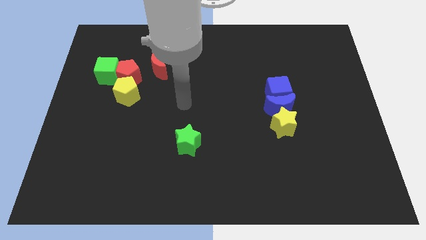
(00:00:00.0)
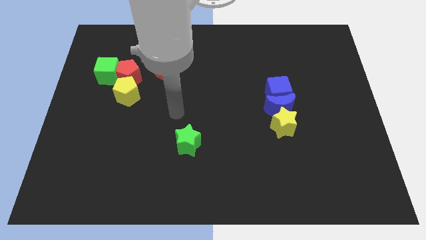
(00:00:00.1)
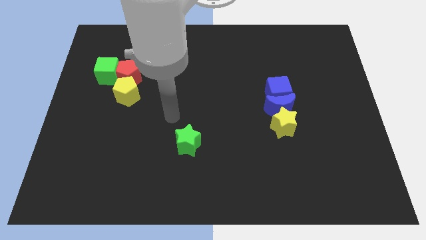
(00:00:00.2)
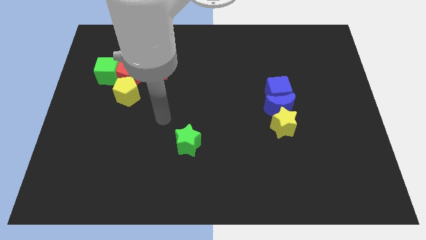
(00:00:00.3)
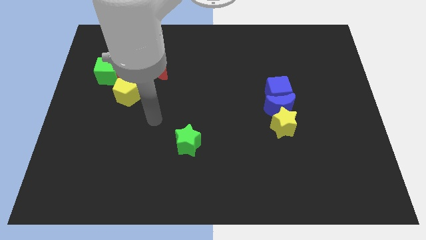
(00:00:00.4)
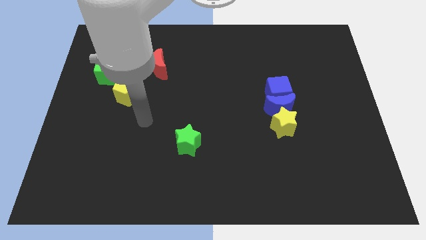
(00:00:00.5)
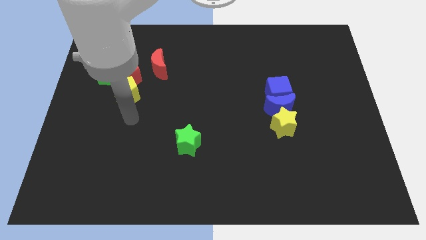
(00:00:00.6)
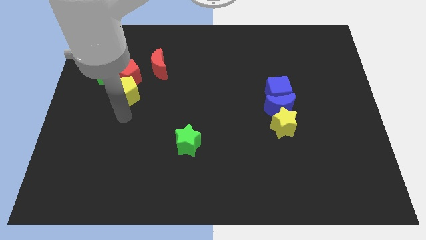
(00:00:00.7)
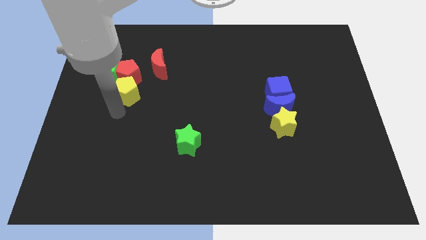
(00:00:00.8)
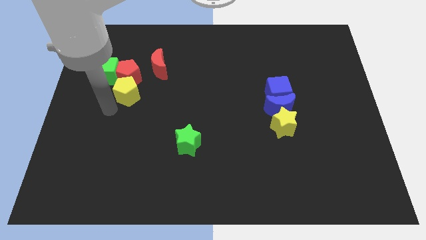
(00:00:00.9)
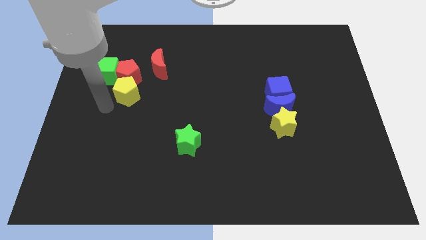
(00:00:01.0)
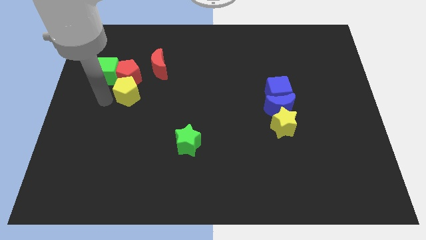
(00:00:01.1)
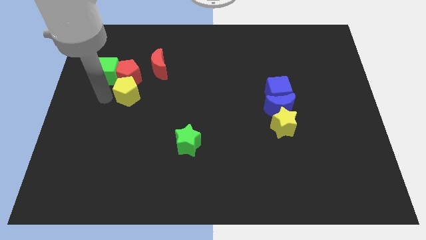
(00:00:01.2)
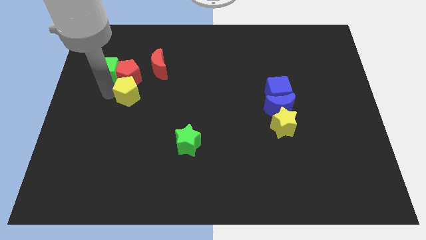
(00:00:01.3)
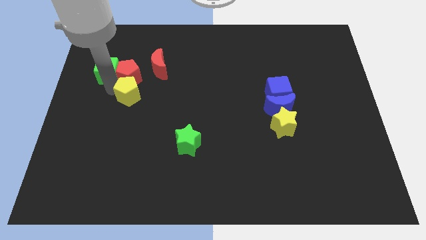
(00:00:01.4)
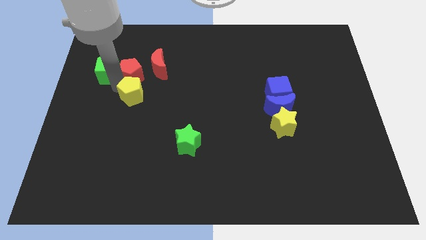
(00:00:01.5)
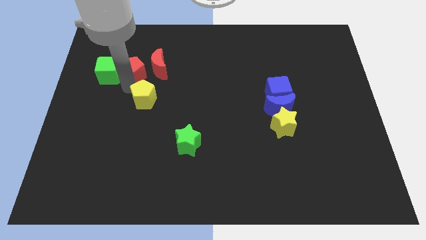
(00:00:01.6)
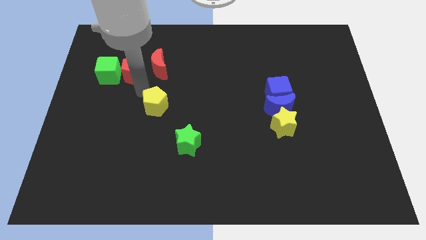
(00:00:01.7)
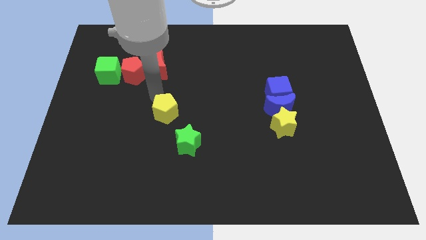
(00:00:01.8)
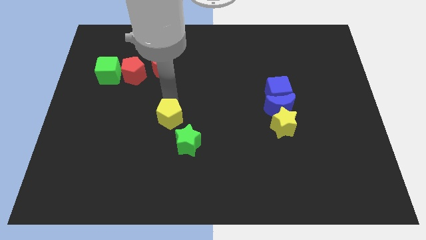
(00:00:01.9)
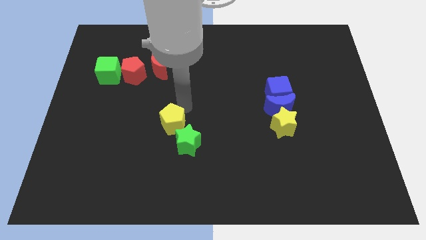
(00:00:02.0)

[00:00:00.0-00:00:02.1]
separate yellow pentagon from the red pentagon

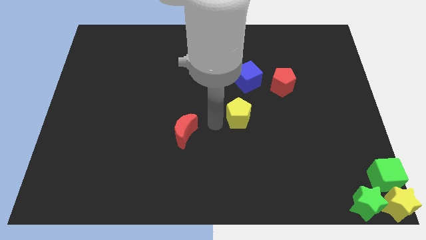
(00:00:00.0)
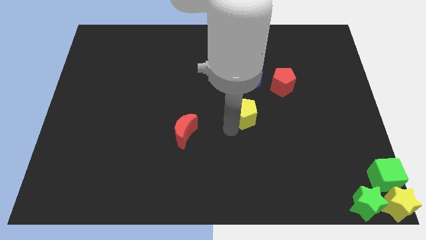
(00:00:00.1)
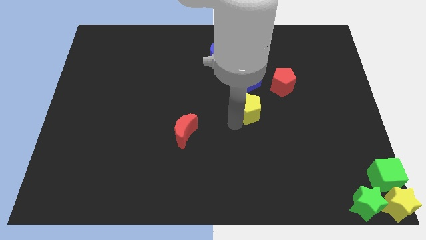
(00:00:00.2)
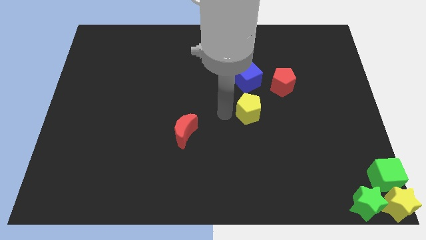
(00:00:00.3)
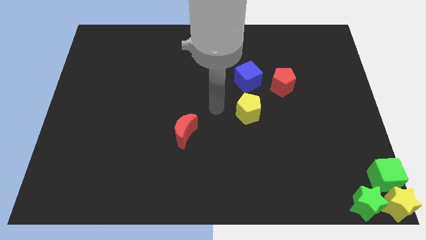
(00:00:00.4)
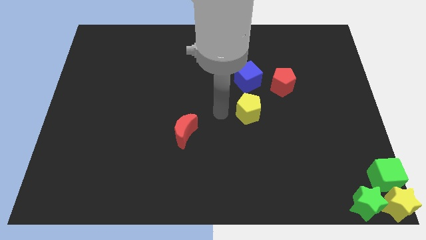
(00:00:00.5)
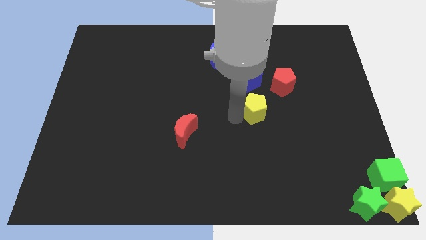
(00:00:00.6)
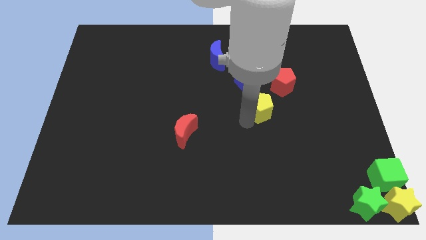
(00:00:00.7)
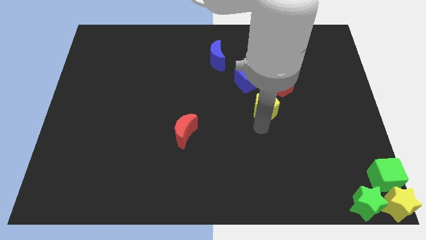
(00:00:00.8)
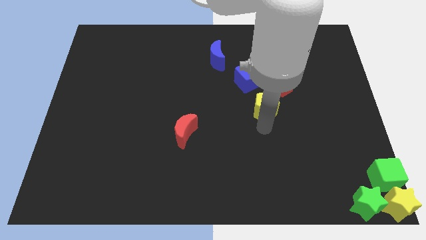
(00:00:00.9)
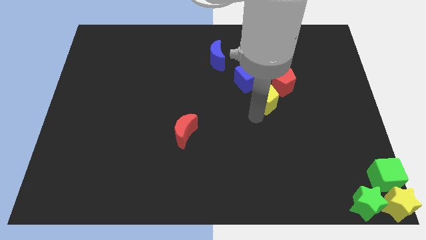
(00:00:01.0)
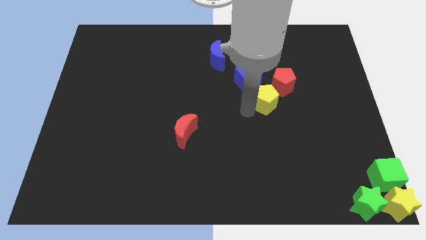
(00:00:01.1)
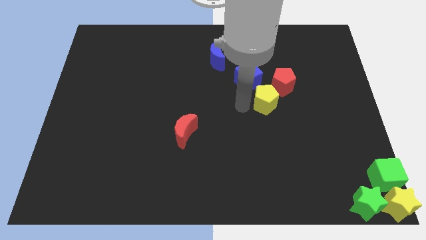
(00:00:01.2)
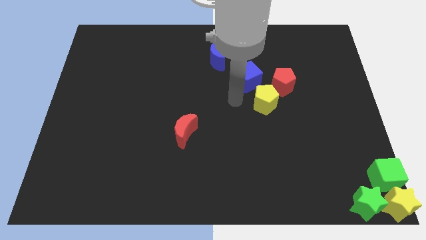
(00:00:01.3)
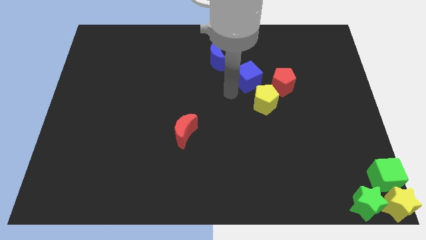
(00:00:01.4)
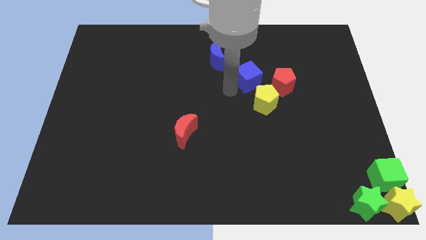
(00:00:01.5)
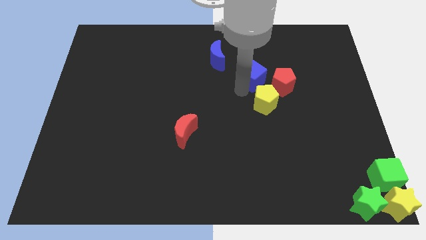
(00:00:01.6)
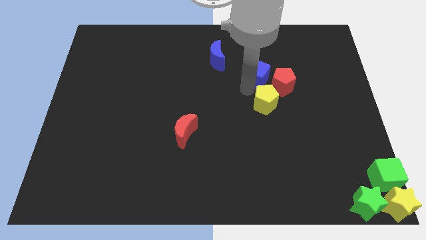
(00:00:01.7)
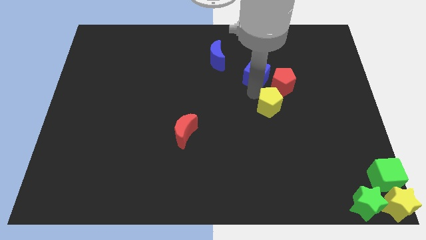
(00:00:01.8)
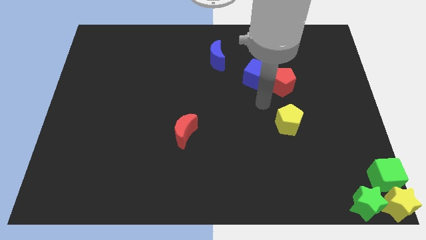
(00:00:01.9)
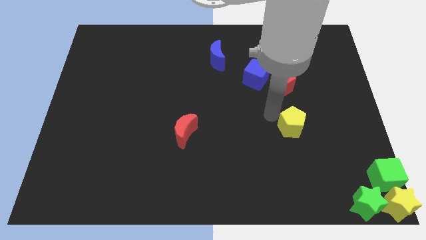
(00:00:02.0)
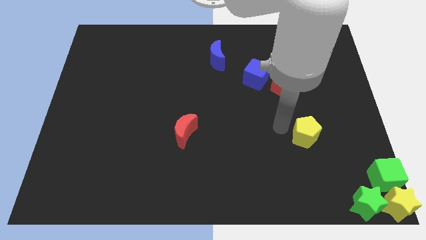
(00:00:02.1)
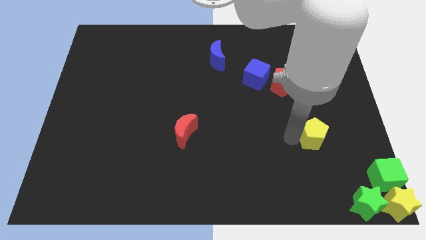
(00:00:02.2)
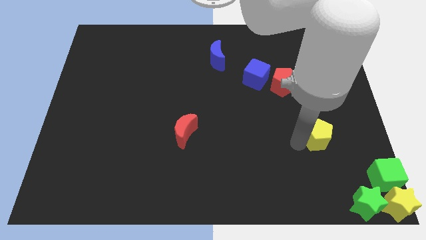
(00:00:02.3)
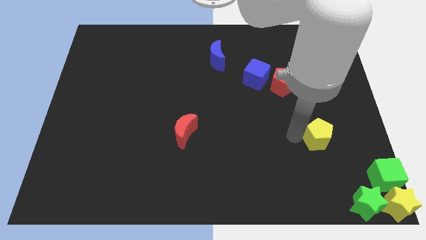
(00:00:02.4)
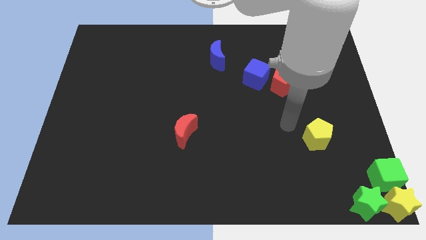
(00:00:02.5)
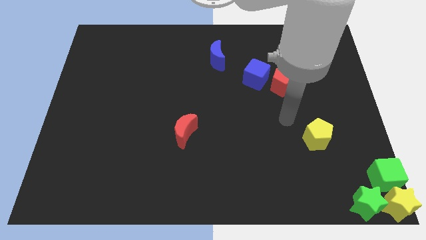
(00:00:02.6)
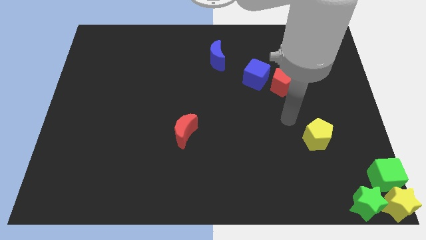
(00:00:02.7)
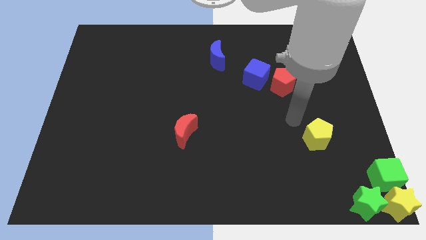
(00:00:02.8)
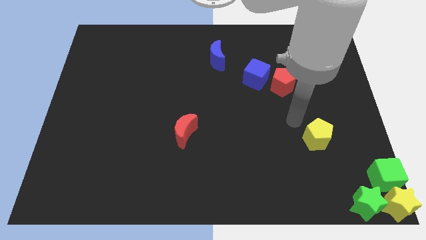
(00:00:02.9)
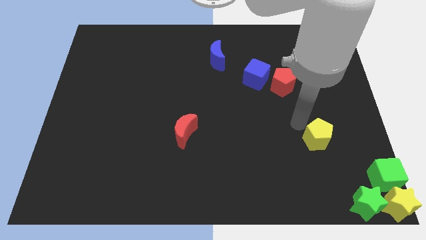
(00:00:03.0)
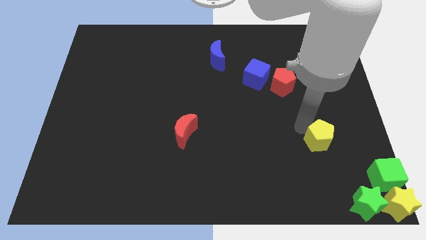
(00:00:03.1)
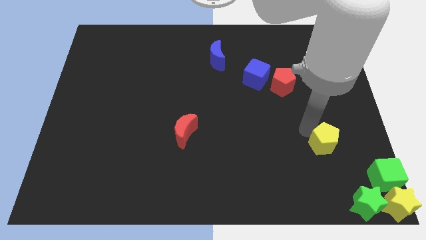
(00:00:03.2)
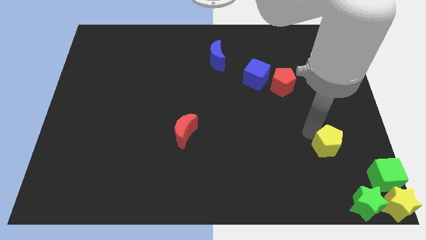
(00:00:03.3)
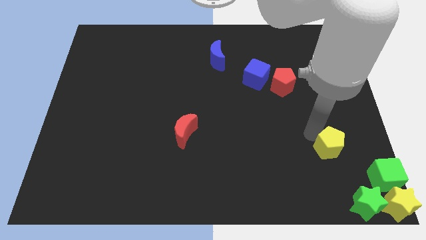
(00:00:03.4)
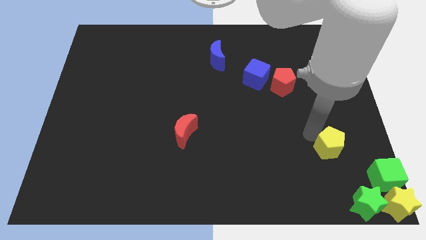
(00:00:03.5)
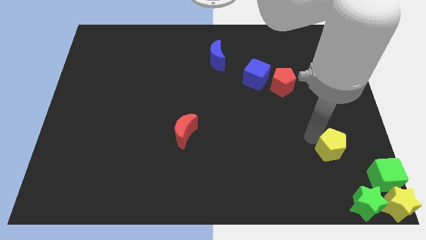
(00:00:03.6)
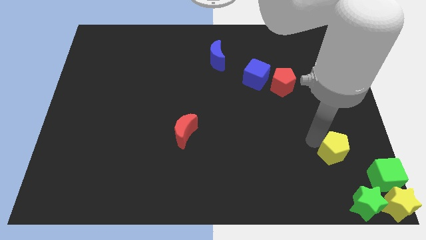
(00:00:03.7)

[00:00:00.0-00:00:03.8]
push the yellow pentagon towards the green cube

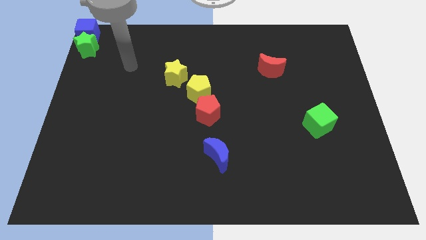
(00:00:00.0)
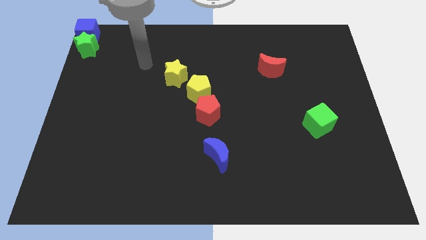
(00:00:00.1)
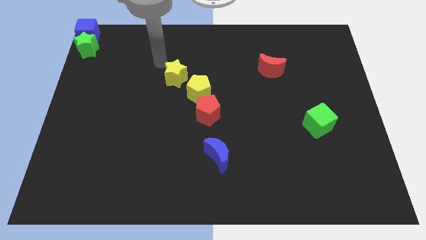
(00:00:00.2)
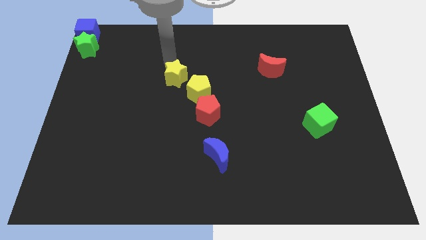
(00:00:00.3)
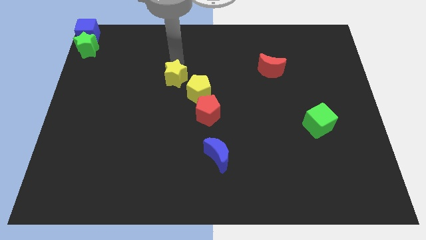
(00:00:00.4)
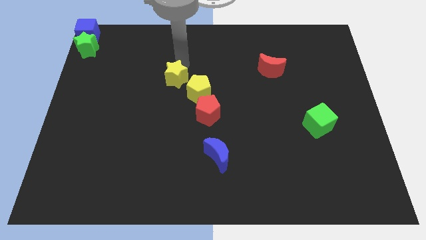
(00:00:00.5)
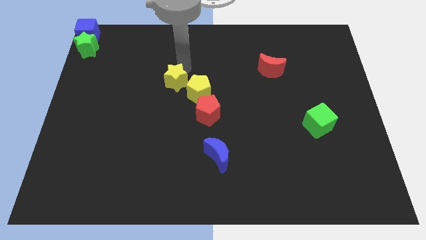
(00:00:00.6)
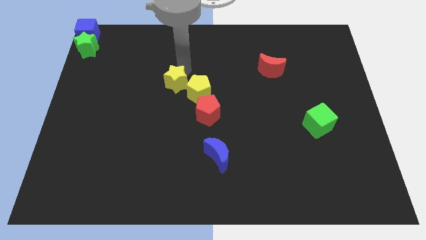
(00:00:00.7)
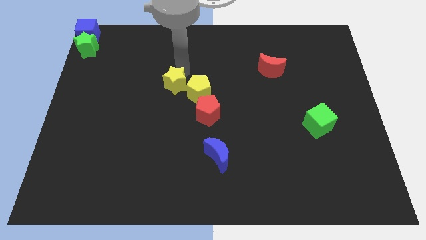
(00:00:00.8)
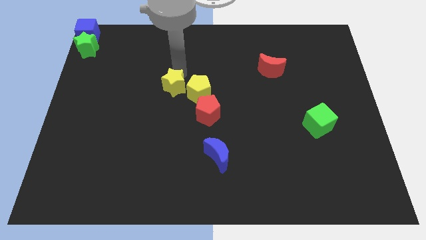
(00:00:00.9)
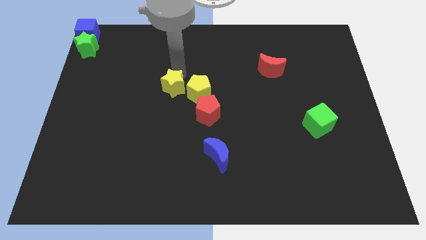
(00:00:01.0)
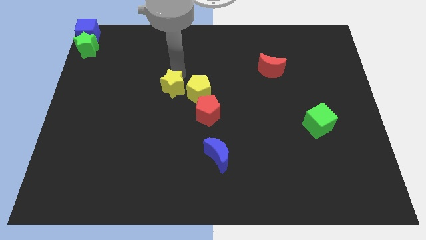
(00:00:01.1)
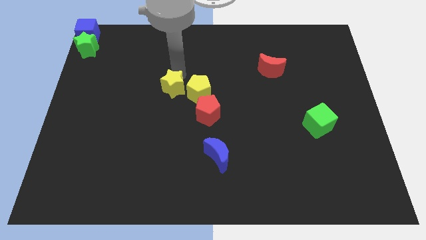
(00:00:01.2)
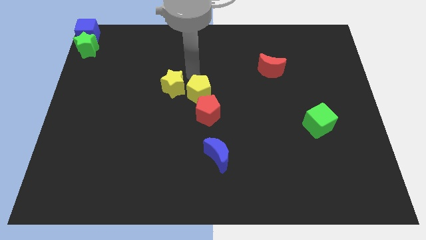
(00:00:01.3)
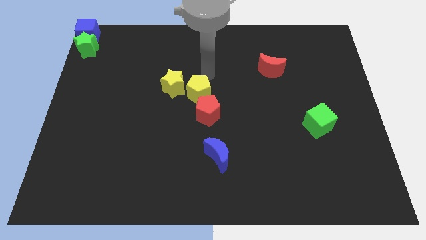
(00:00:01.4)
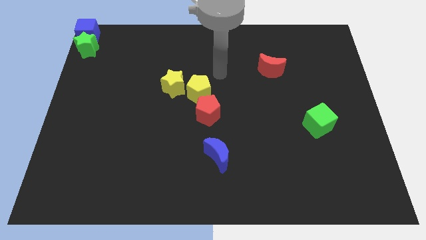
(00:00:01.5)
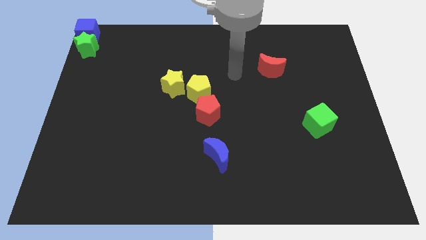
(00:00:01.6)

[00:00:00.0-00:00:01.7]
push the yellow star slightly downward

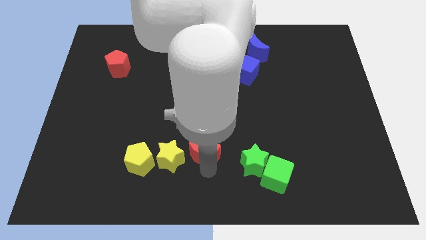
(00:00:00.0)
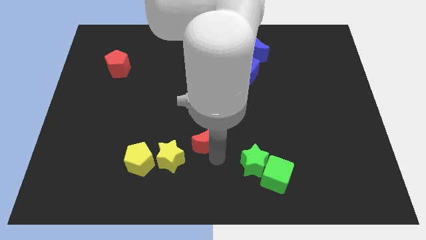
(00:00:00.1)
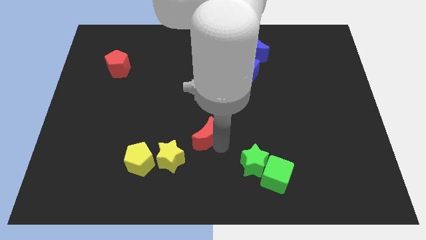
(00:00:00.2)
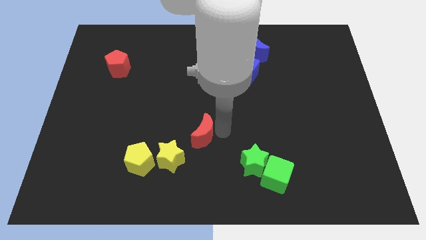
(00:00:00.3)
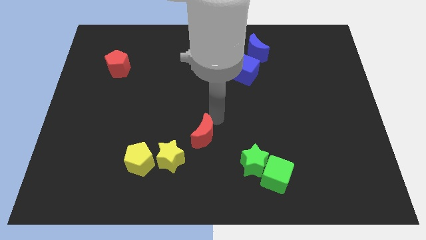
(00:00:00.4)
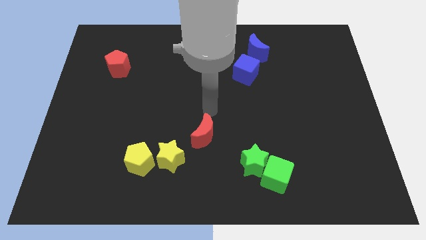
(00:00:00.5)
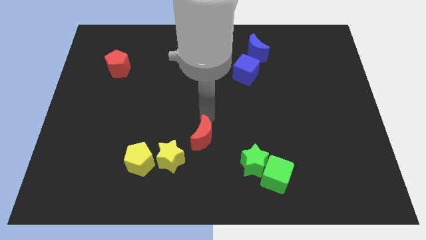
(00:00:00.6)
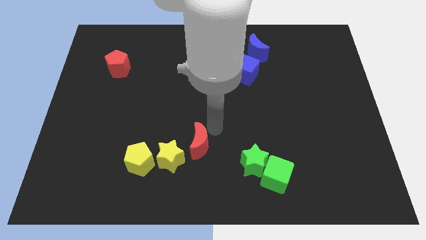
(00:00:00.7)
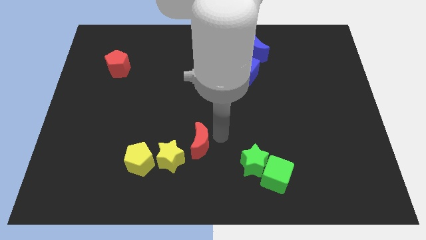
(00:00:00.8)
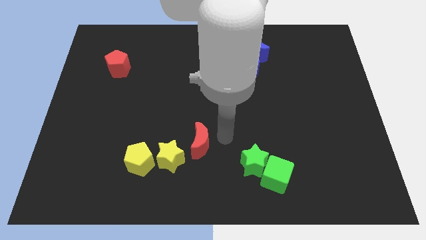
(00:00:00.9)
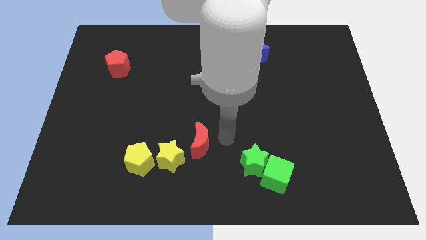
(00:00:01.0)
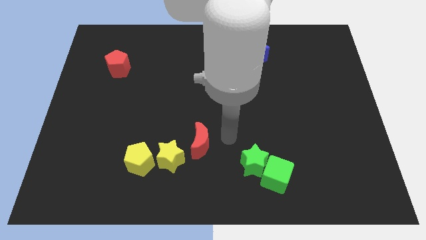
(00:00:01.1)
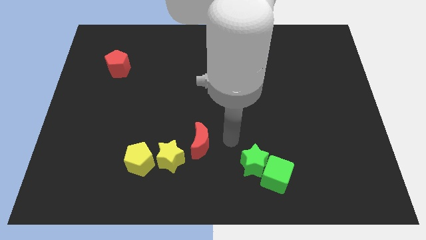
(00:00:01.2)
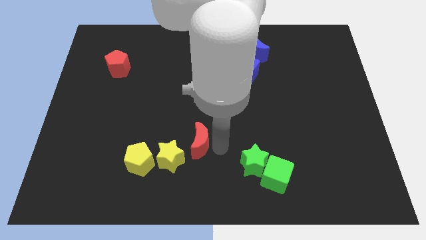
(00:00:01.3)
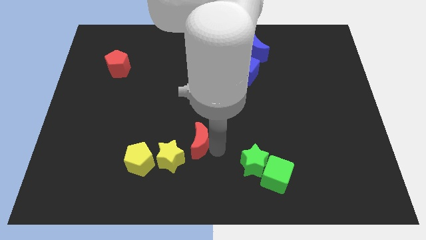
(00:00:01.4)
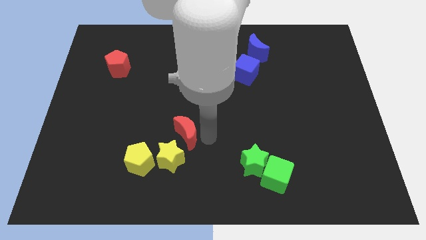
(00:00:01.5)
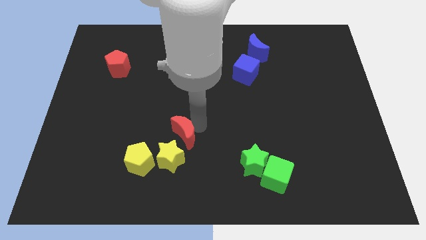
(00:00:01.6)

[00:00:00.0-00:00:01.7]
push the red crescent towards the top side
